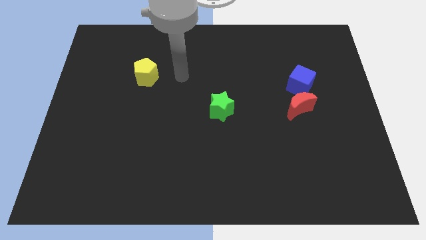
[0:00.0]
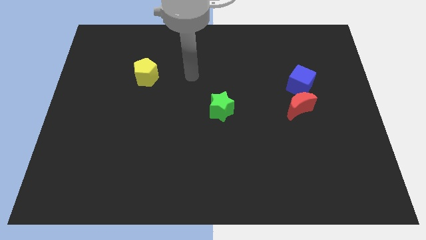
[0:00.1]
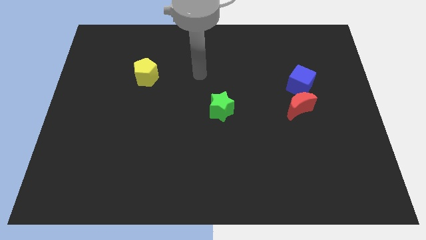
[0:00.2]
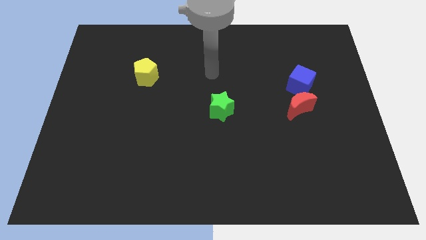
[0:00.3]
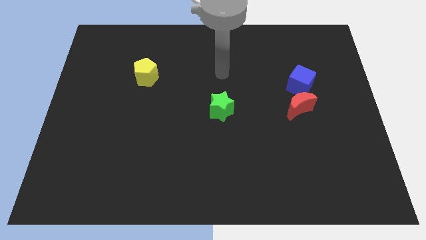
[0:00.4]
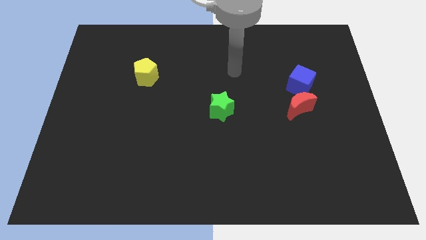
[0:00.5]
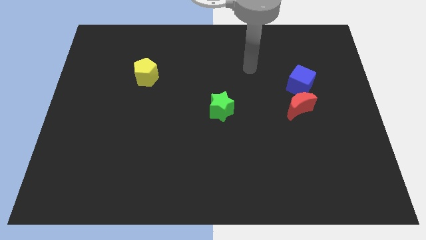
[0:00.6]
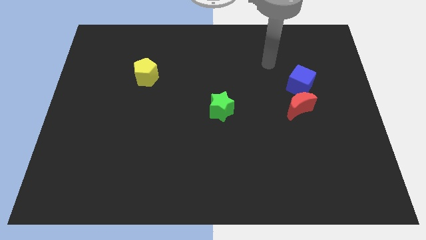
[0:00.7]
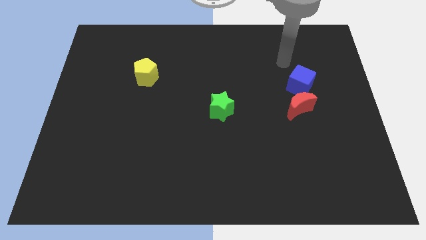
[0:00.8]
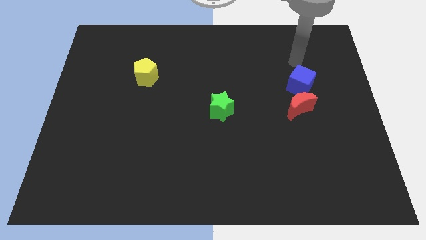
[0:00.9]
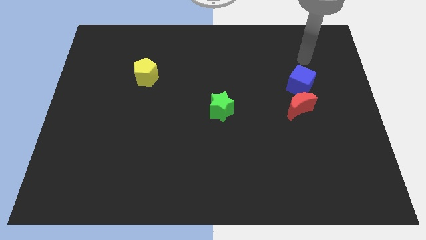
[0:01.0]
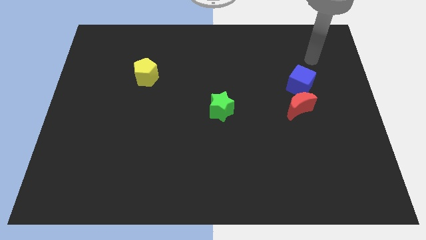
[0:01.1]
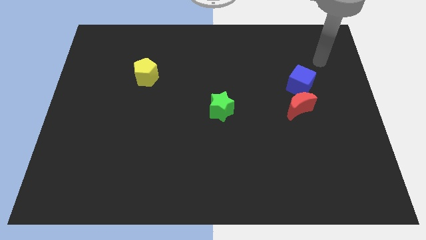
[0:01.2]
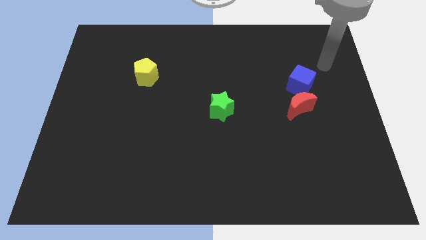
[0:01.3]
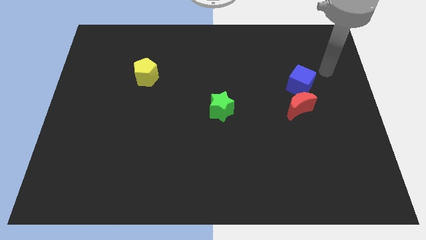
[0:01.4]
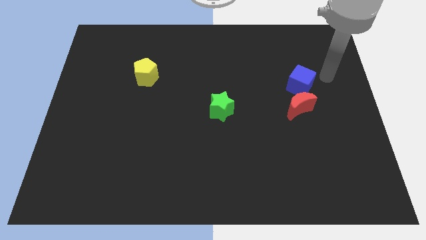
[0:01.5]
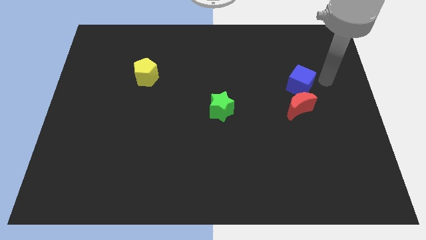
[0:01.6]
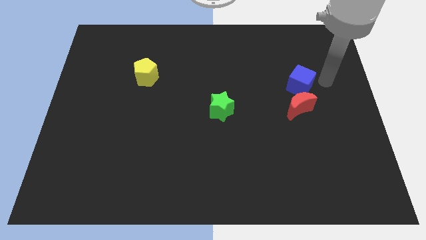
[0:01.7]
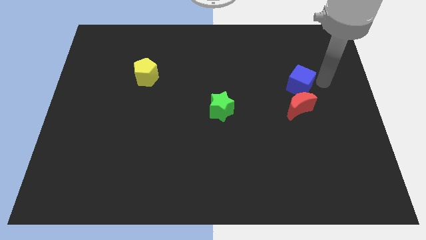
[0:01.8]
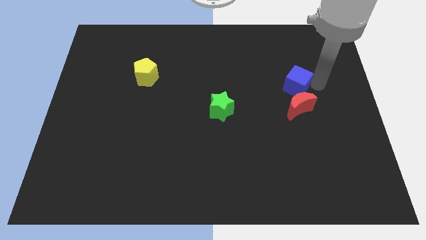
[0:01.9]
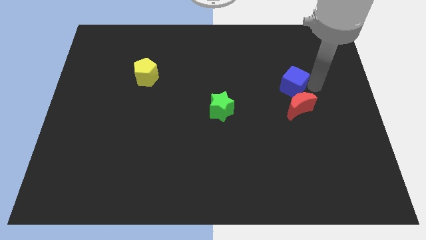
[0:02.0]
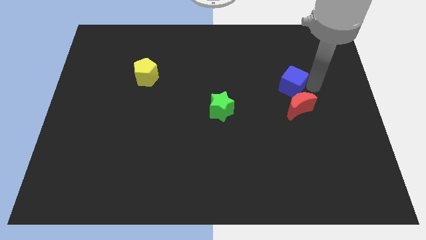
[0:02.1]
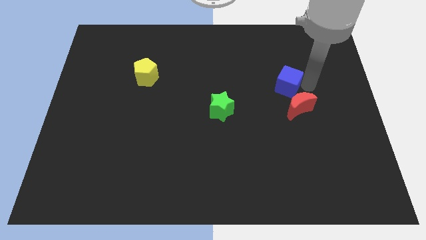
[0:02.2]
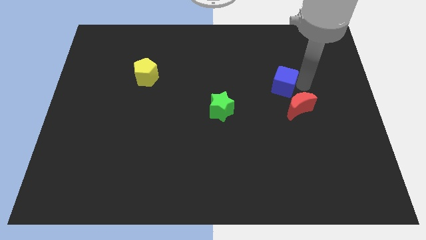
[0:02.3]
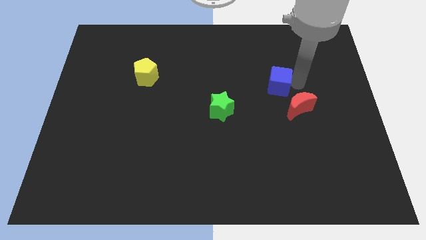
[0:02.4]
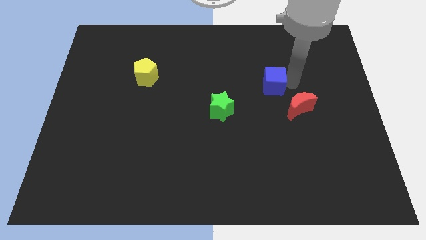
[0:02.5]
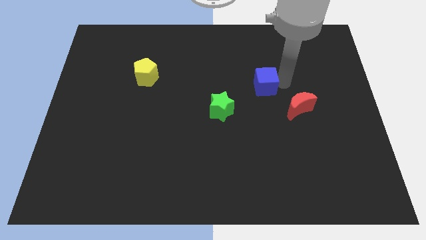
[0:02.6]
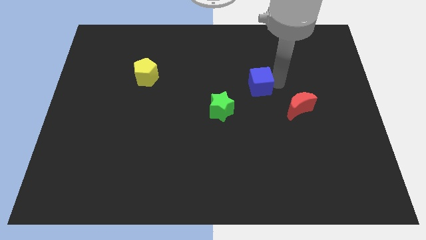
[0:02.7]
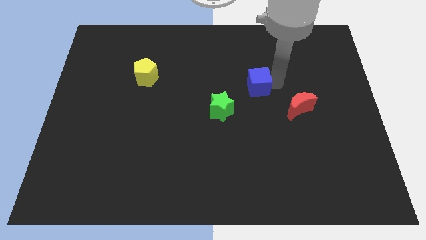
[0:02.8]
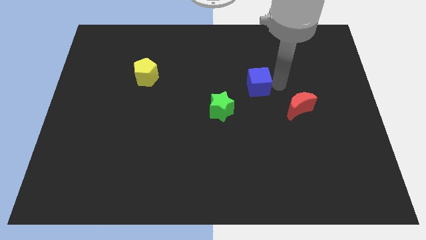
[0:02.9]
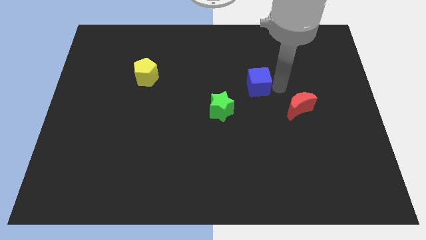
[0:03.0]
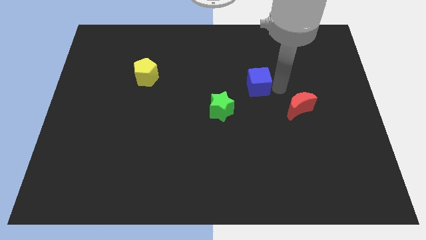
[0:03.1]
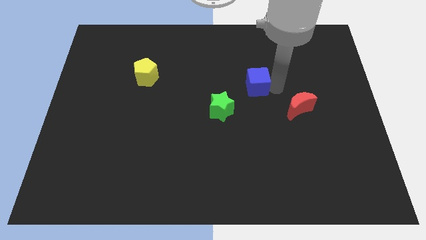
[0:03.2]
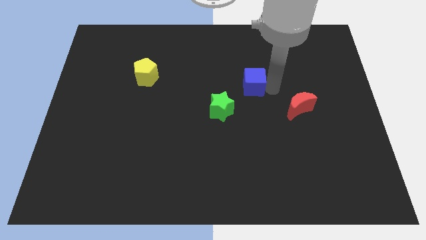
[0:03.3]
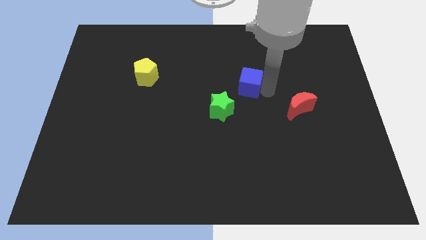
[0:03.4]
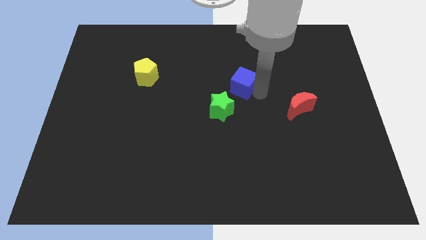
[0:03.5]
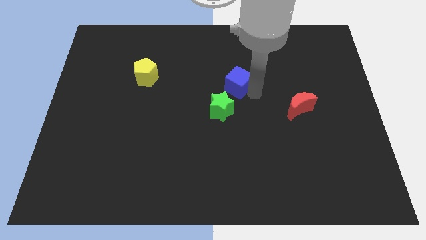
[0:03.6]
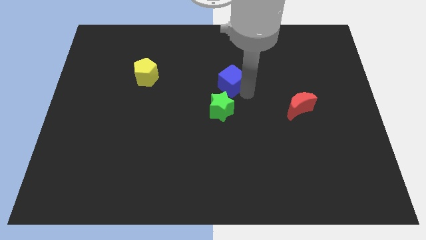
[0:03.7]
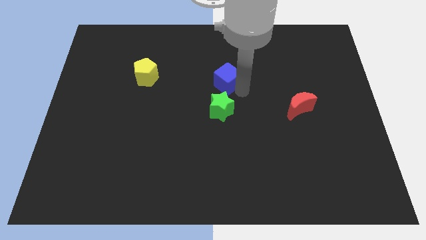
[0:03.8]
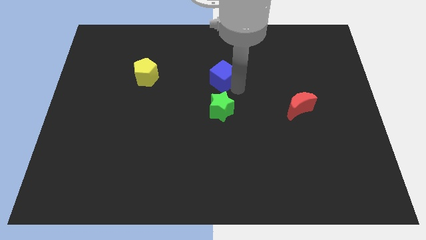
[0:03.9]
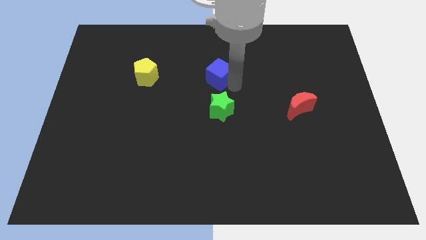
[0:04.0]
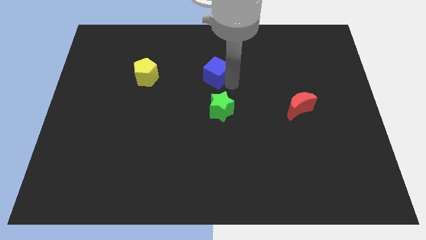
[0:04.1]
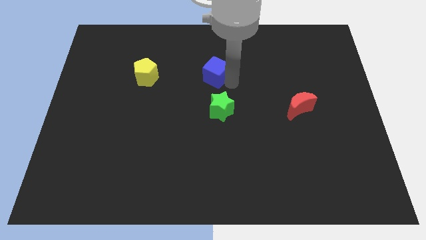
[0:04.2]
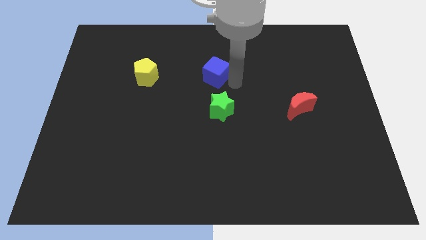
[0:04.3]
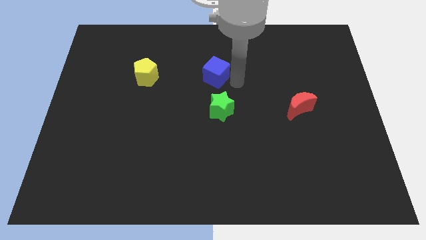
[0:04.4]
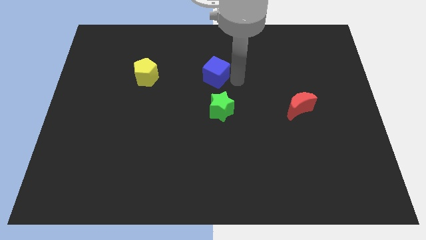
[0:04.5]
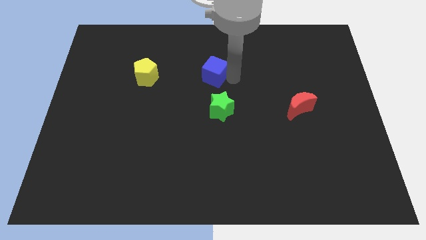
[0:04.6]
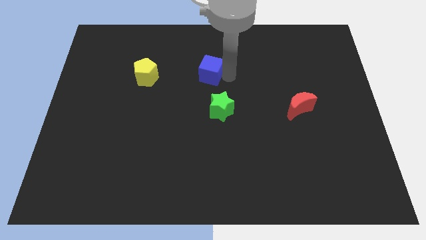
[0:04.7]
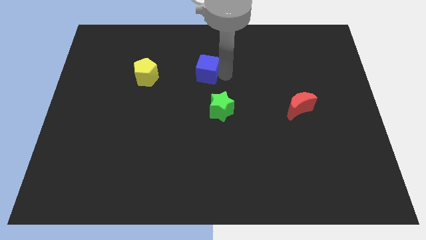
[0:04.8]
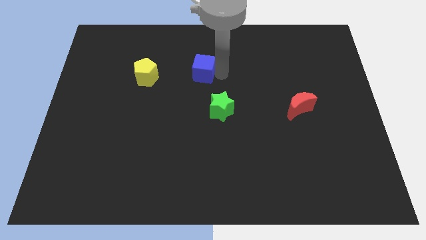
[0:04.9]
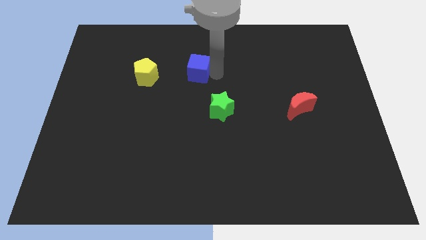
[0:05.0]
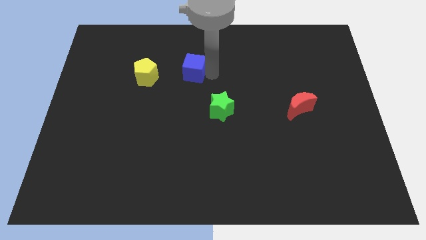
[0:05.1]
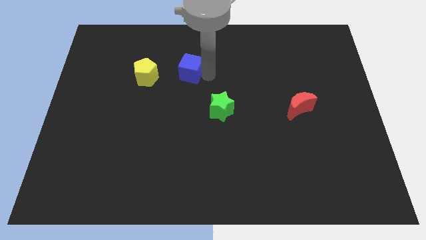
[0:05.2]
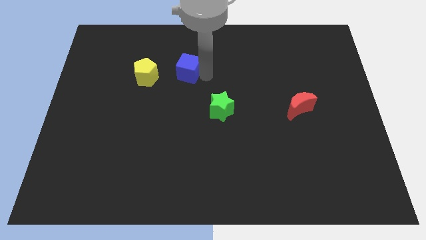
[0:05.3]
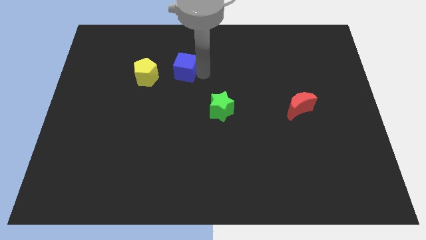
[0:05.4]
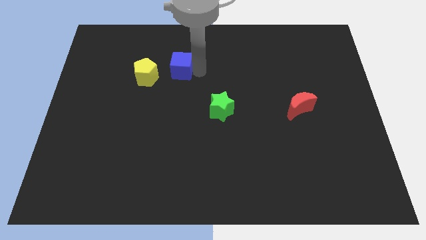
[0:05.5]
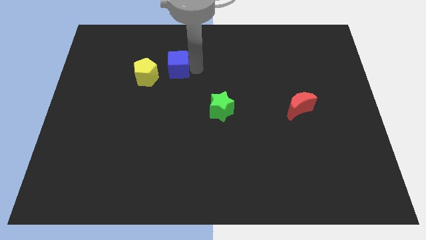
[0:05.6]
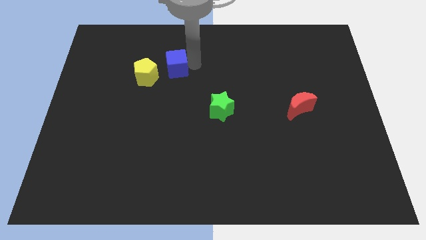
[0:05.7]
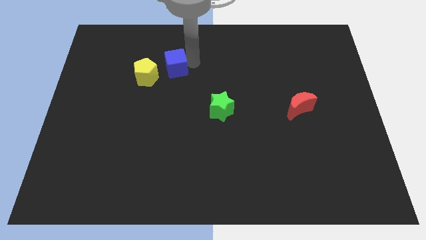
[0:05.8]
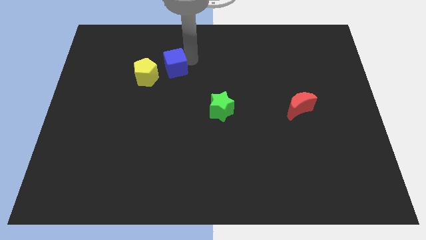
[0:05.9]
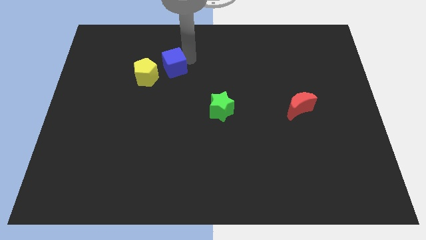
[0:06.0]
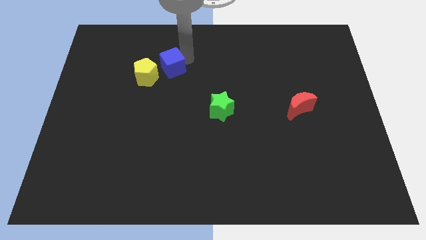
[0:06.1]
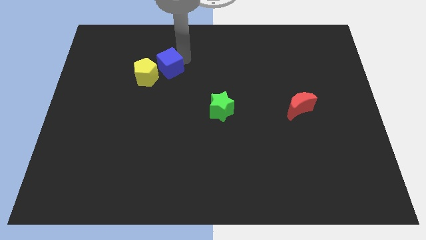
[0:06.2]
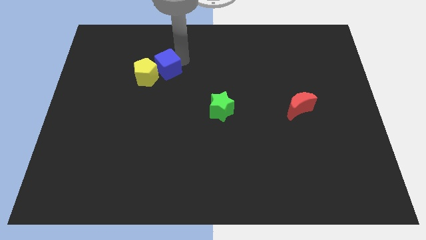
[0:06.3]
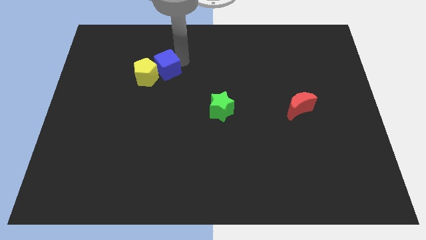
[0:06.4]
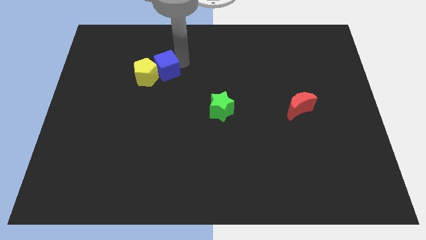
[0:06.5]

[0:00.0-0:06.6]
push the blue block towards the pentagon

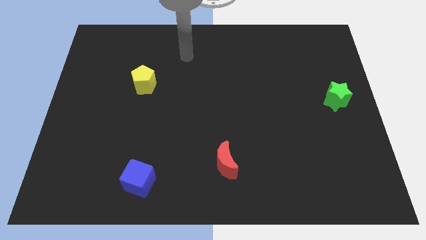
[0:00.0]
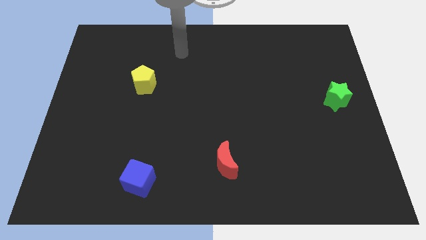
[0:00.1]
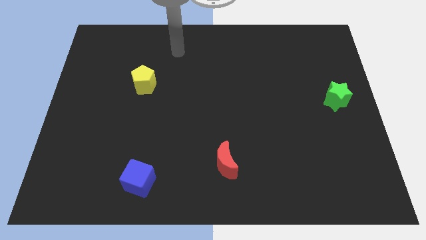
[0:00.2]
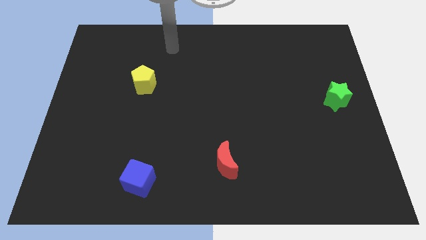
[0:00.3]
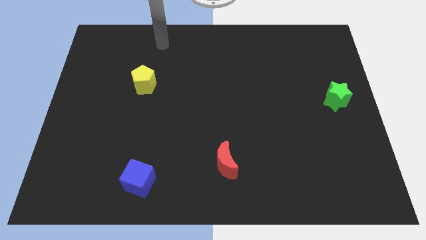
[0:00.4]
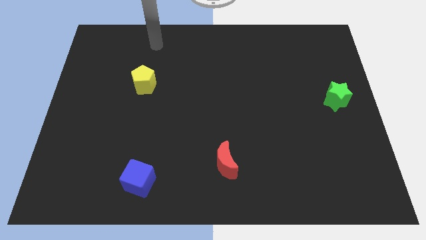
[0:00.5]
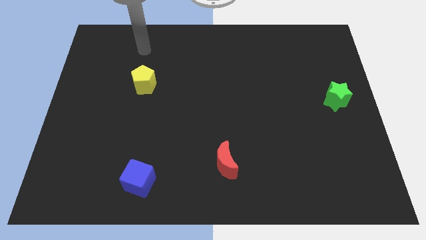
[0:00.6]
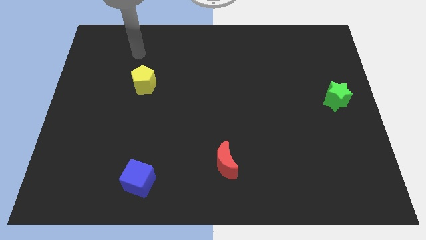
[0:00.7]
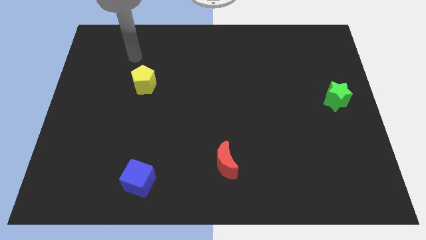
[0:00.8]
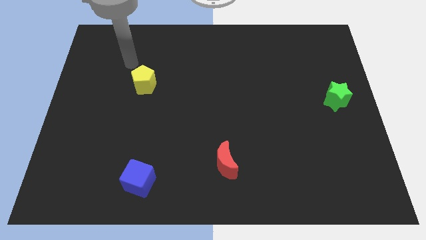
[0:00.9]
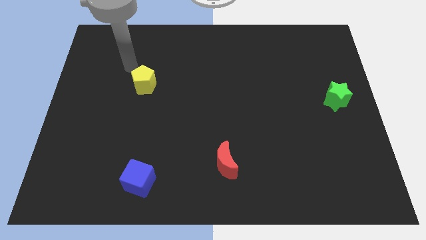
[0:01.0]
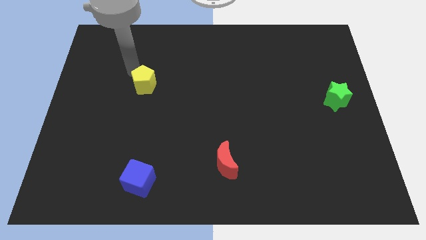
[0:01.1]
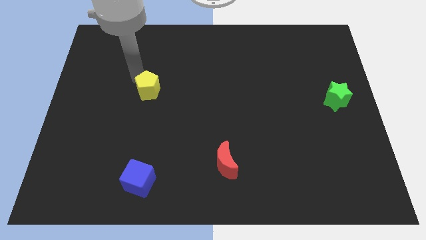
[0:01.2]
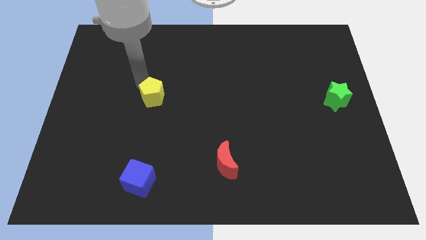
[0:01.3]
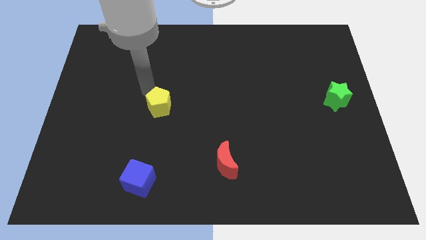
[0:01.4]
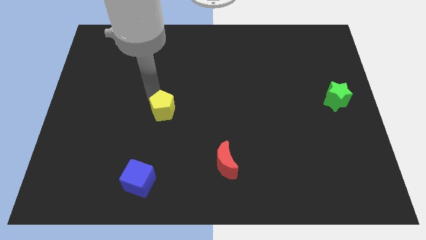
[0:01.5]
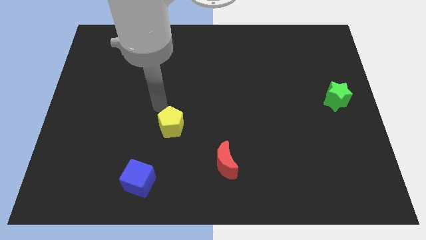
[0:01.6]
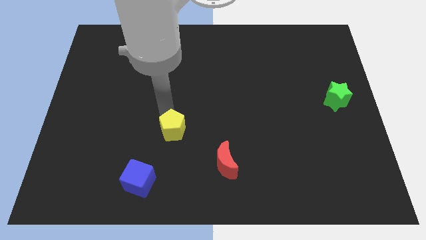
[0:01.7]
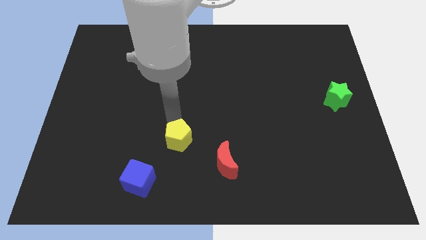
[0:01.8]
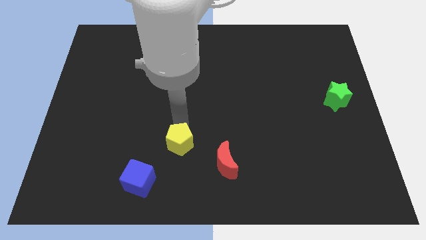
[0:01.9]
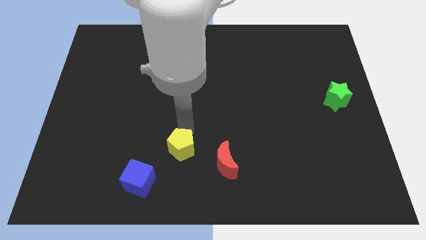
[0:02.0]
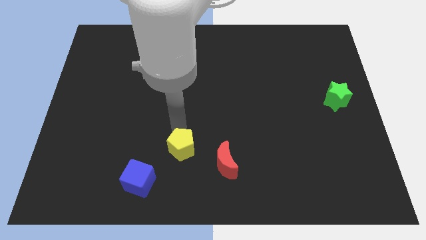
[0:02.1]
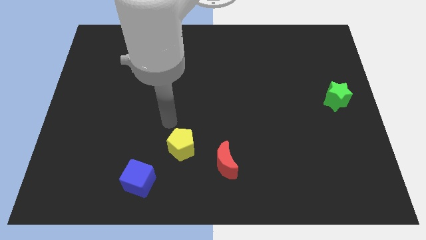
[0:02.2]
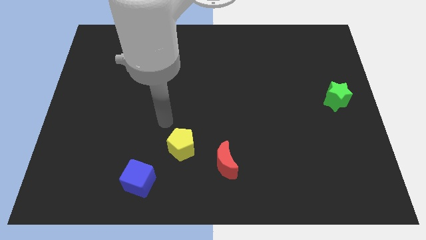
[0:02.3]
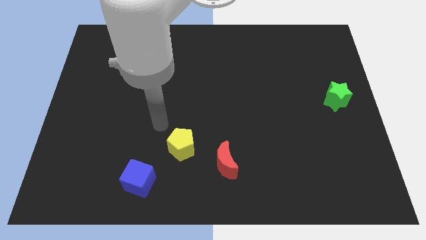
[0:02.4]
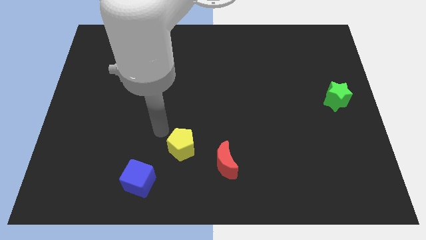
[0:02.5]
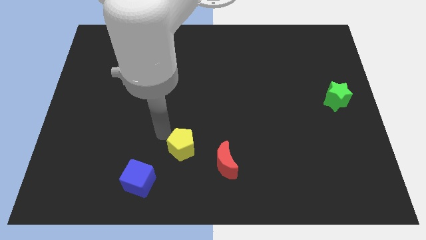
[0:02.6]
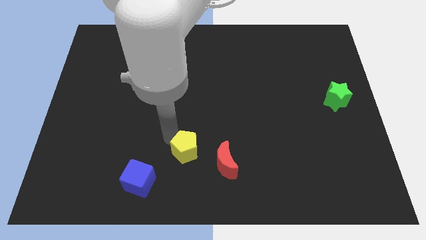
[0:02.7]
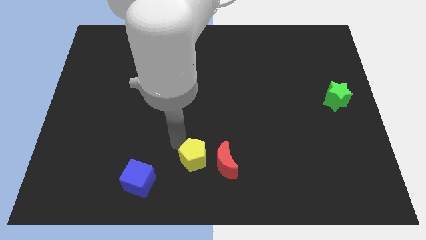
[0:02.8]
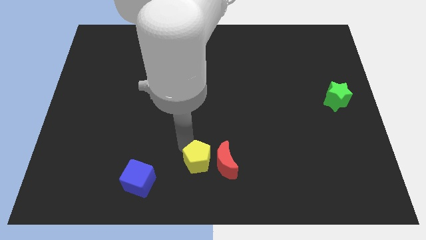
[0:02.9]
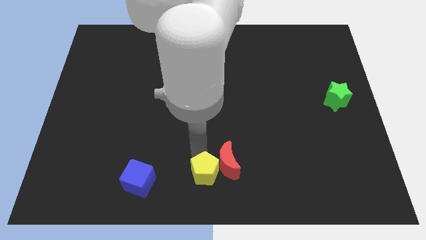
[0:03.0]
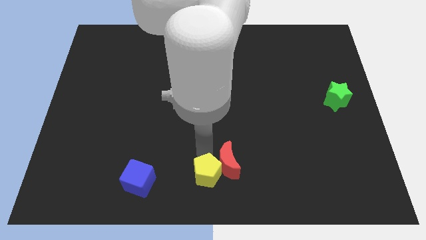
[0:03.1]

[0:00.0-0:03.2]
slide the yellow pentagon towards the red block
